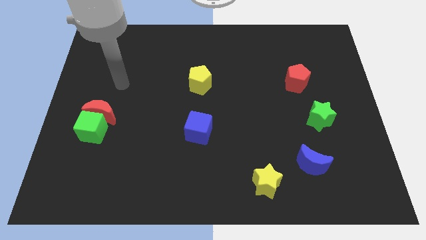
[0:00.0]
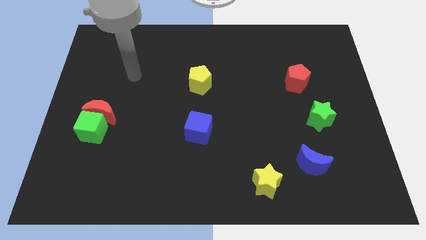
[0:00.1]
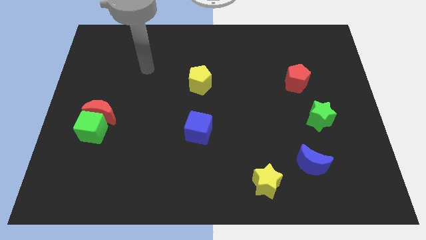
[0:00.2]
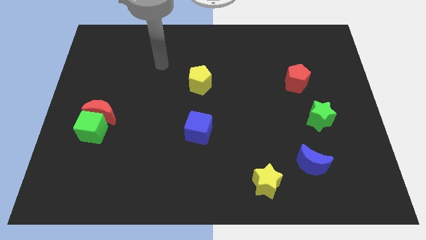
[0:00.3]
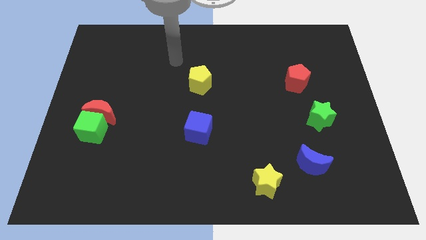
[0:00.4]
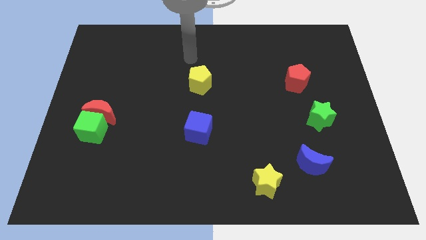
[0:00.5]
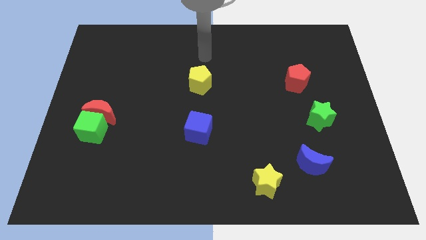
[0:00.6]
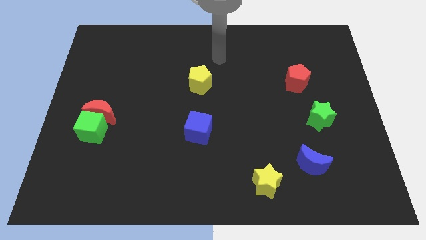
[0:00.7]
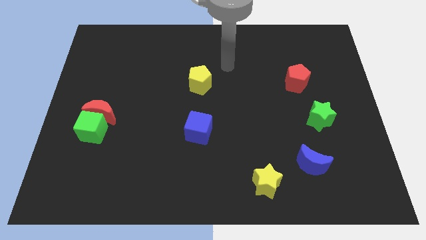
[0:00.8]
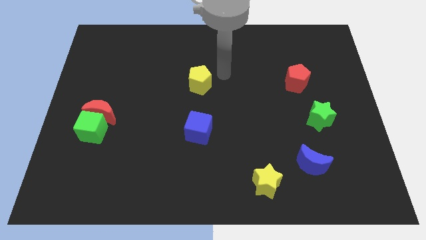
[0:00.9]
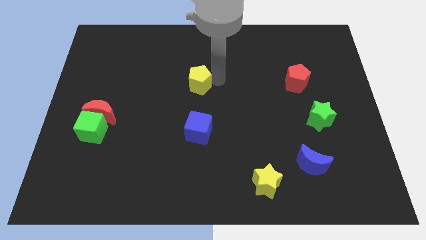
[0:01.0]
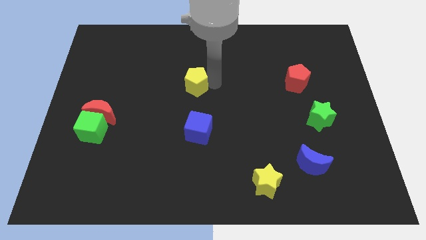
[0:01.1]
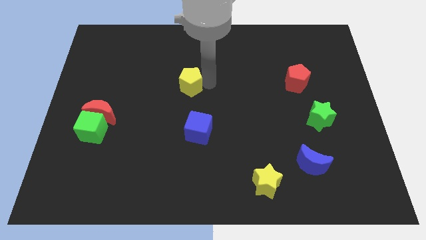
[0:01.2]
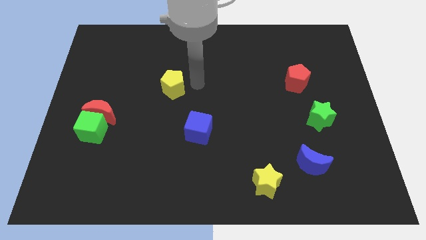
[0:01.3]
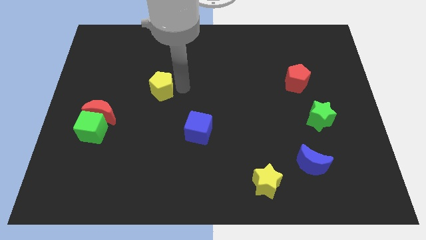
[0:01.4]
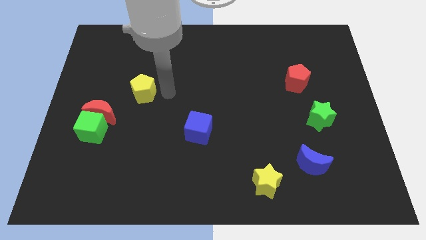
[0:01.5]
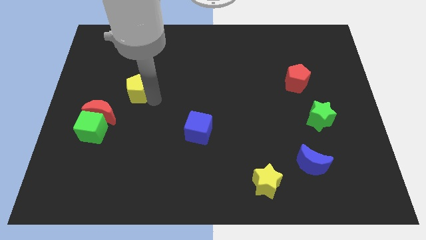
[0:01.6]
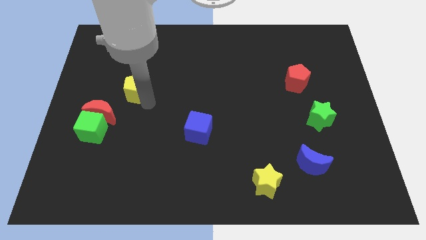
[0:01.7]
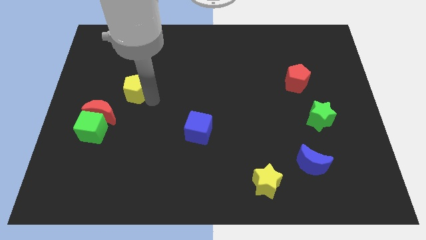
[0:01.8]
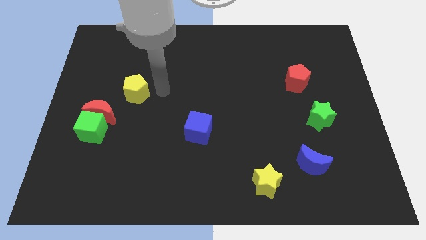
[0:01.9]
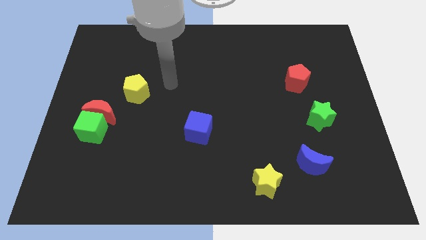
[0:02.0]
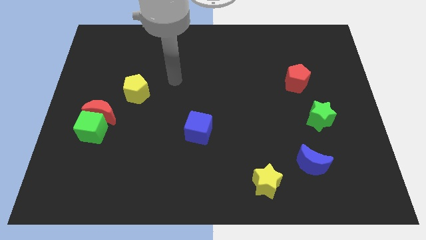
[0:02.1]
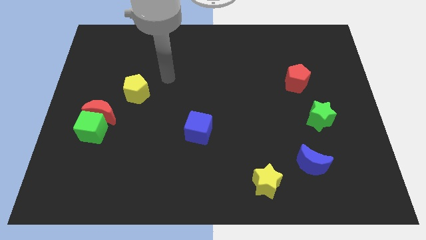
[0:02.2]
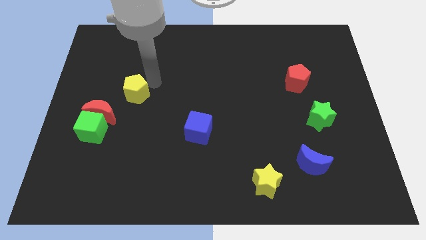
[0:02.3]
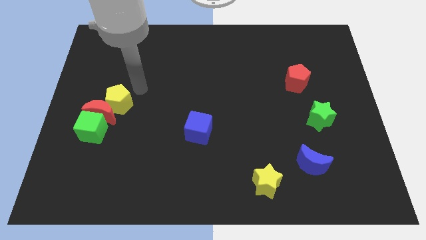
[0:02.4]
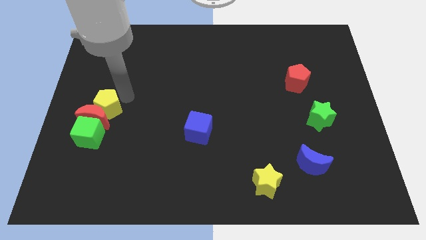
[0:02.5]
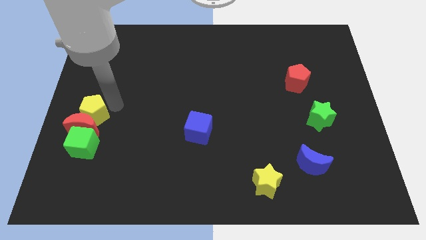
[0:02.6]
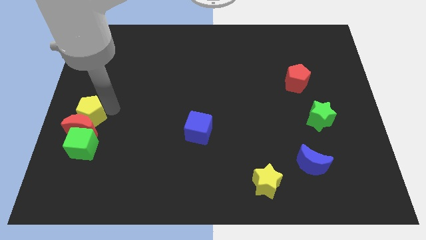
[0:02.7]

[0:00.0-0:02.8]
push the yellow pentagon into the red crescent

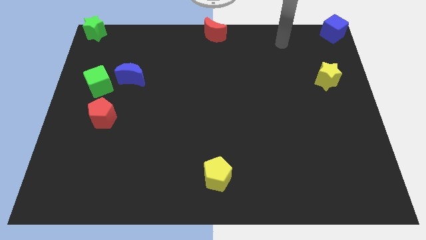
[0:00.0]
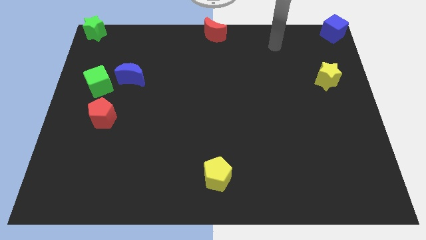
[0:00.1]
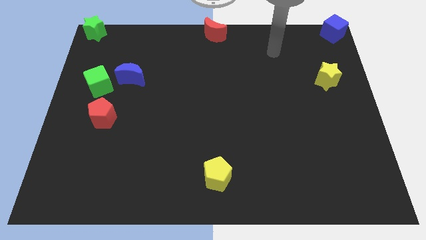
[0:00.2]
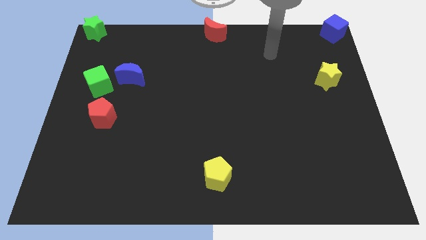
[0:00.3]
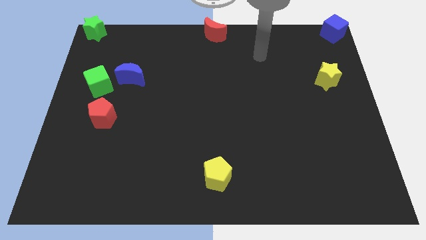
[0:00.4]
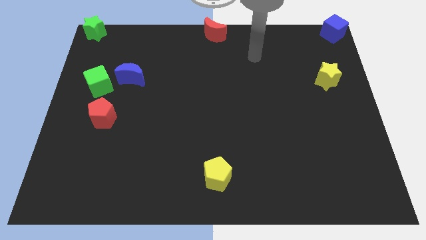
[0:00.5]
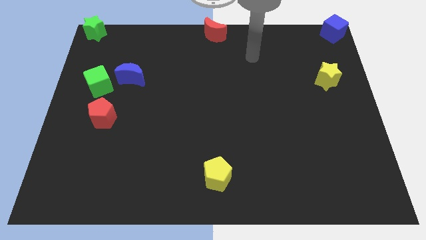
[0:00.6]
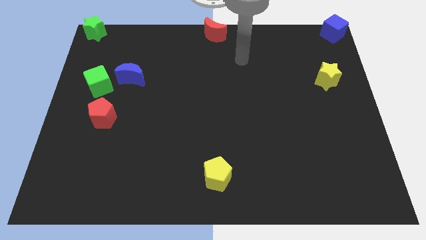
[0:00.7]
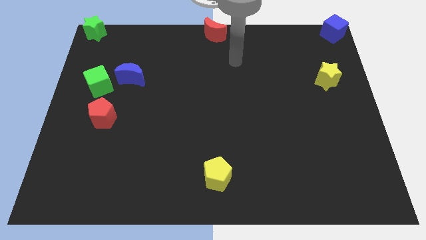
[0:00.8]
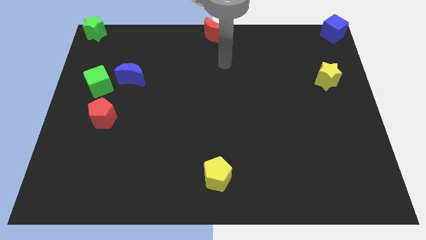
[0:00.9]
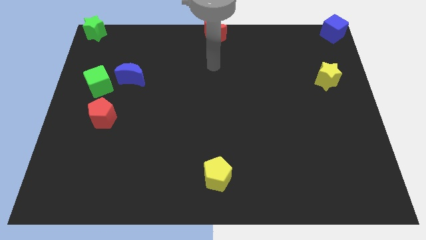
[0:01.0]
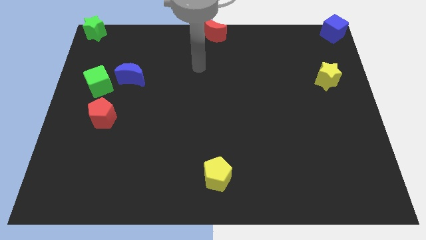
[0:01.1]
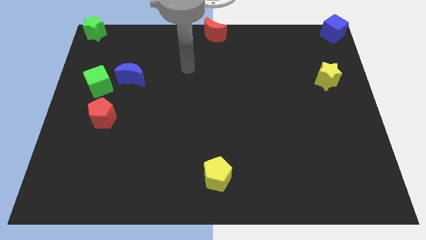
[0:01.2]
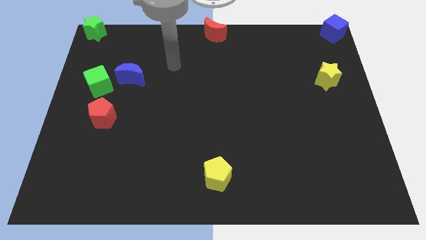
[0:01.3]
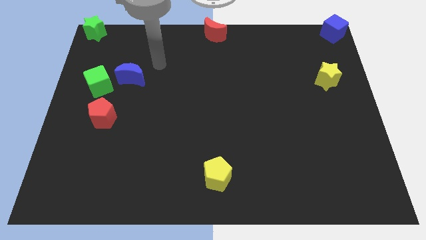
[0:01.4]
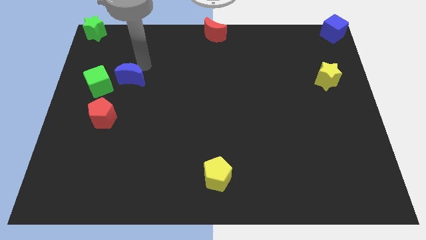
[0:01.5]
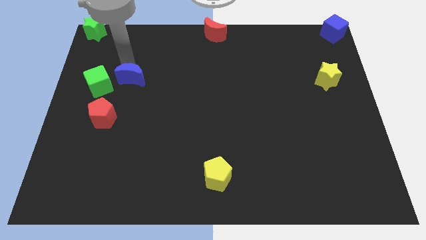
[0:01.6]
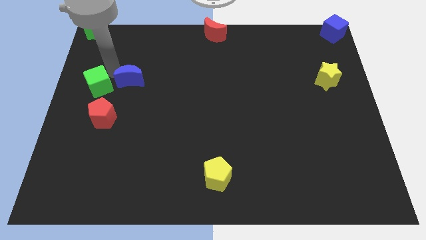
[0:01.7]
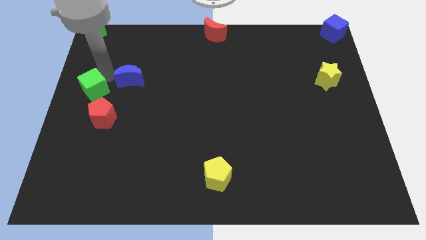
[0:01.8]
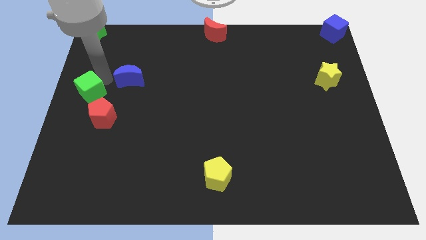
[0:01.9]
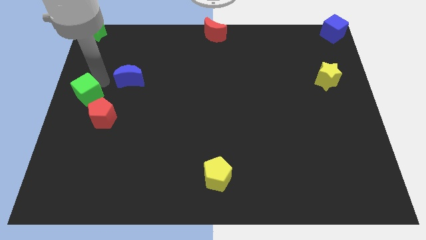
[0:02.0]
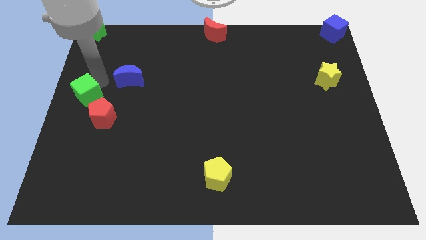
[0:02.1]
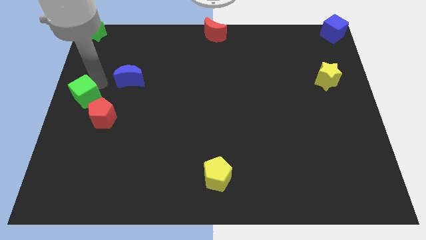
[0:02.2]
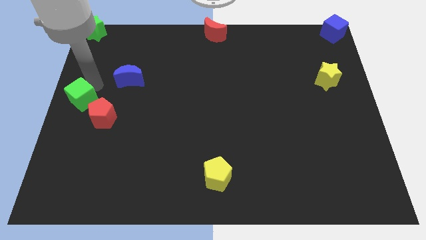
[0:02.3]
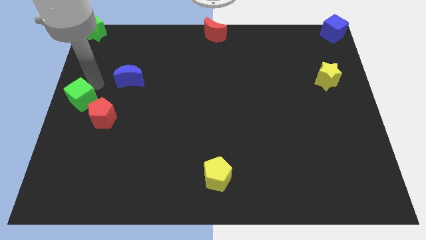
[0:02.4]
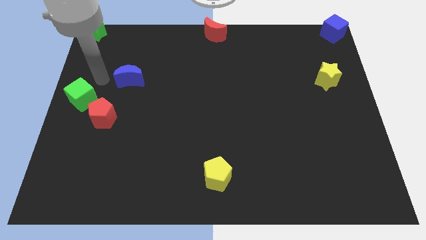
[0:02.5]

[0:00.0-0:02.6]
push the green cube slightly away from the blue moon

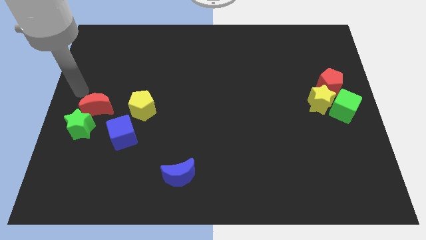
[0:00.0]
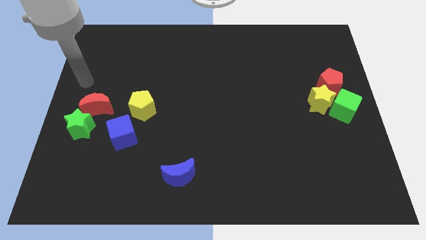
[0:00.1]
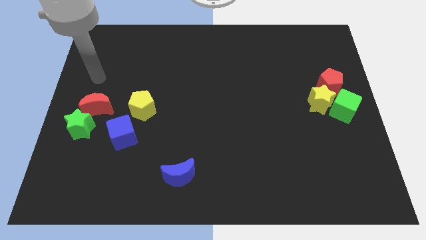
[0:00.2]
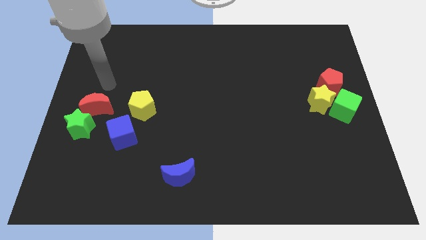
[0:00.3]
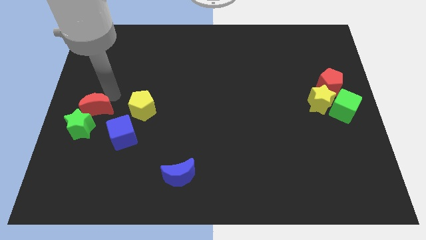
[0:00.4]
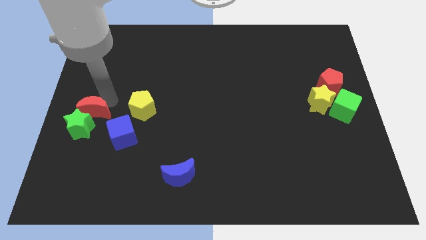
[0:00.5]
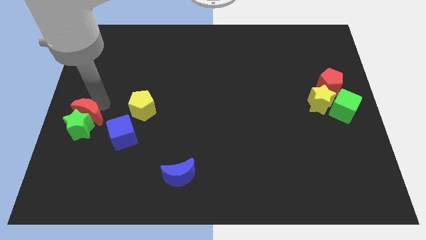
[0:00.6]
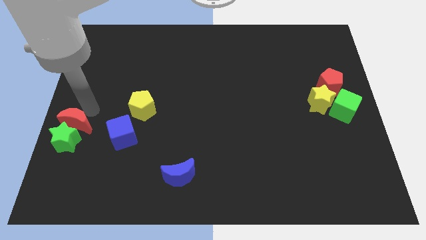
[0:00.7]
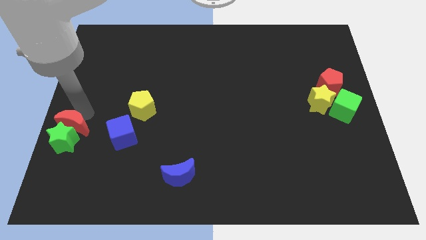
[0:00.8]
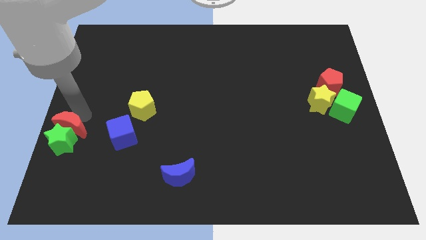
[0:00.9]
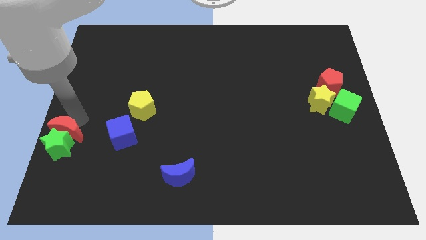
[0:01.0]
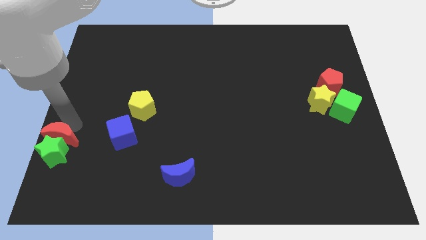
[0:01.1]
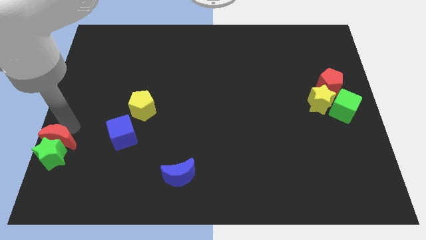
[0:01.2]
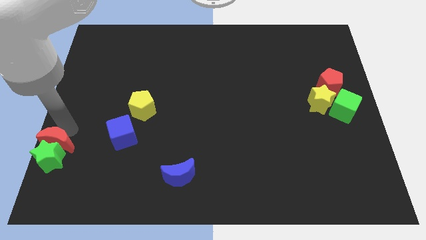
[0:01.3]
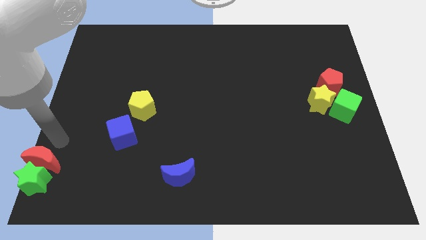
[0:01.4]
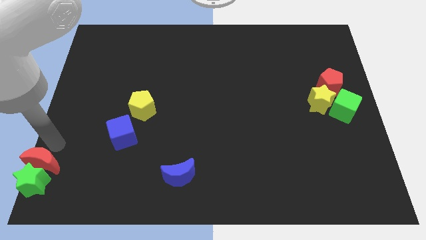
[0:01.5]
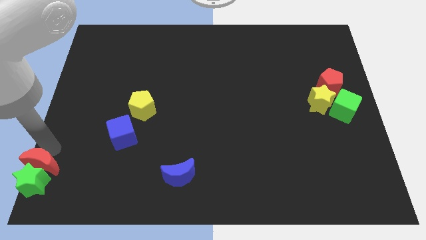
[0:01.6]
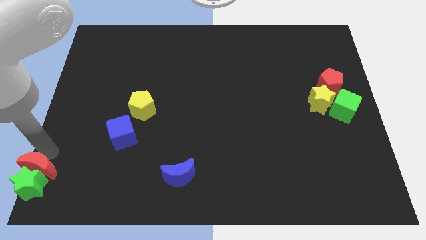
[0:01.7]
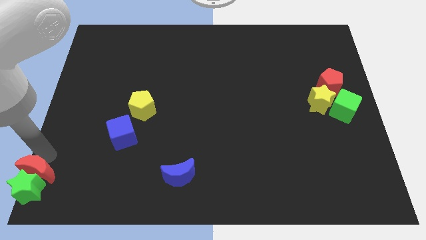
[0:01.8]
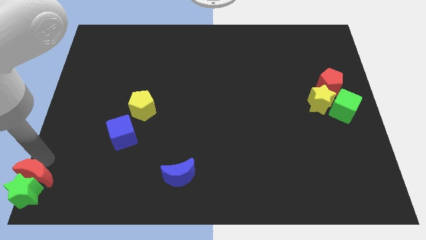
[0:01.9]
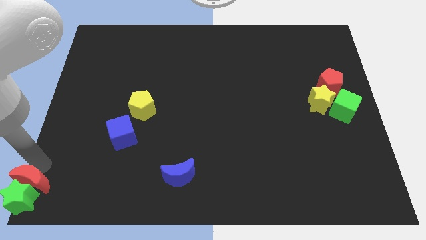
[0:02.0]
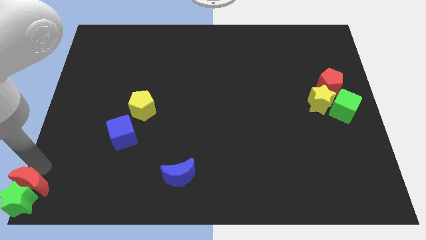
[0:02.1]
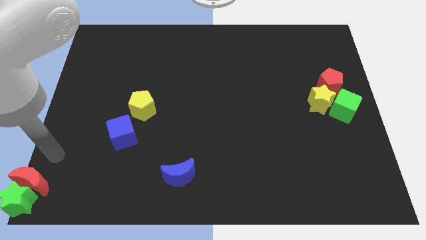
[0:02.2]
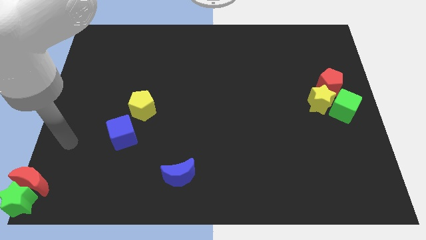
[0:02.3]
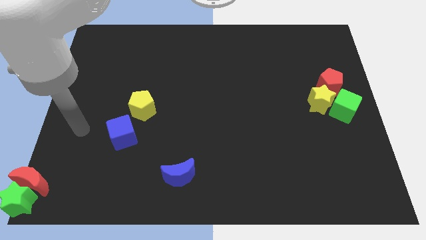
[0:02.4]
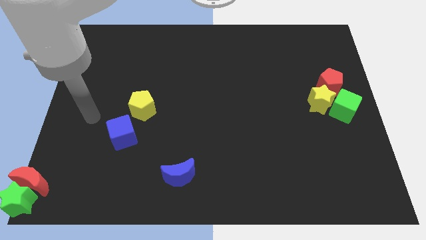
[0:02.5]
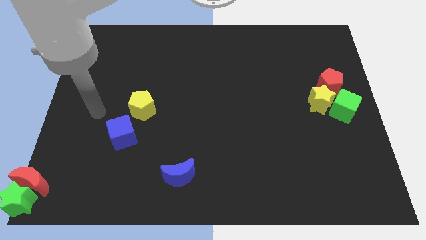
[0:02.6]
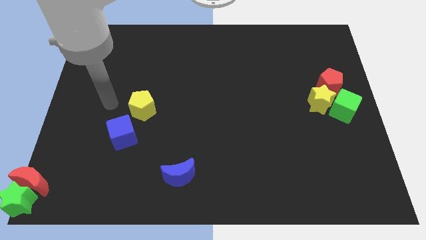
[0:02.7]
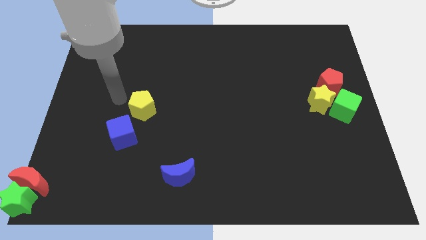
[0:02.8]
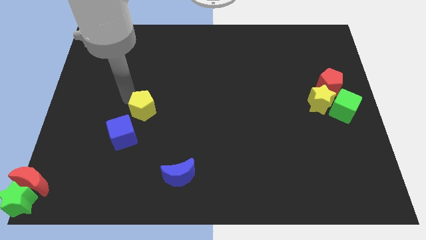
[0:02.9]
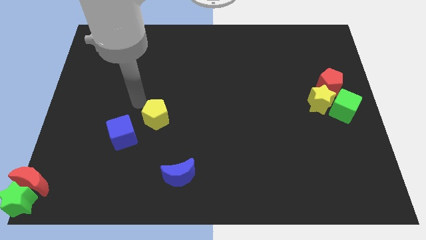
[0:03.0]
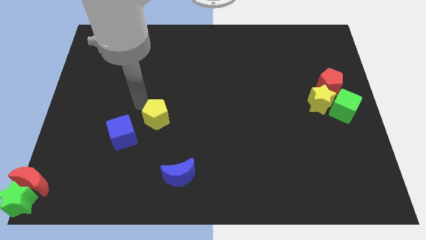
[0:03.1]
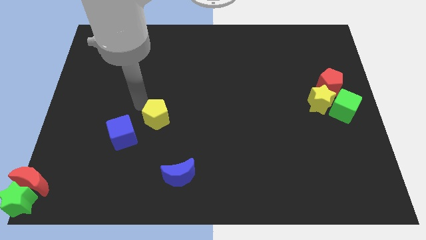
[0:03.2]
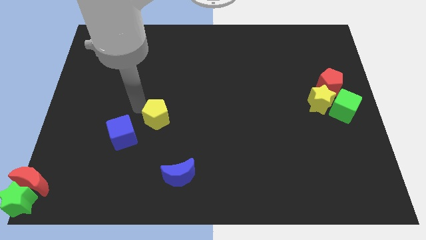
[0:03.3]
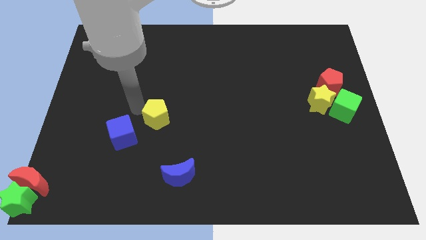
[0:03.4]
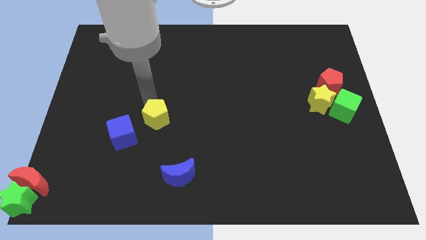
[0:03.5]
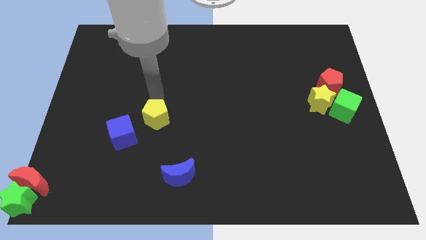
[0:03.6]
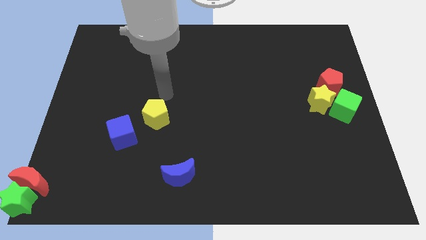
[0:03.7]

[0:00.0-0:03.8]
move the green star to the bottom left
